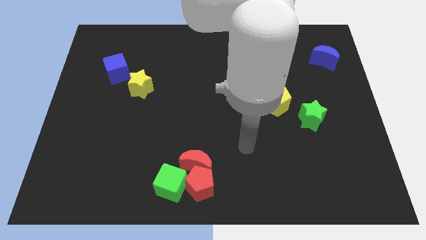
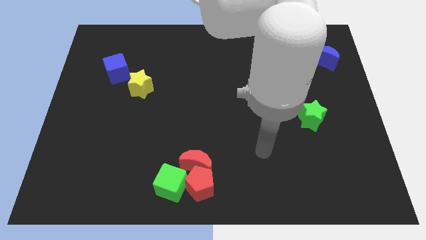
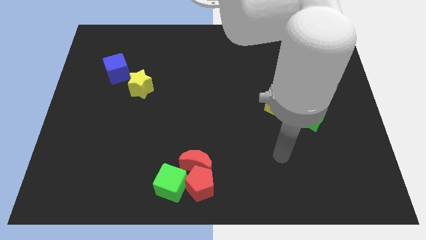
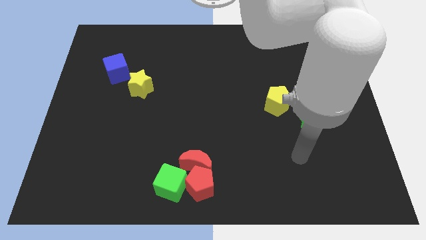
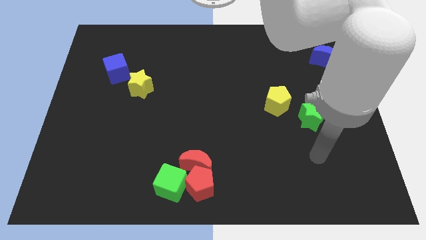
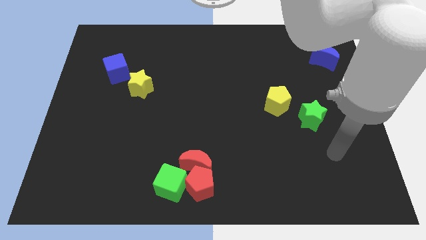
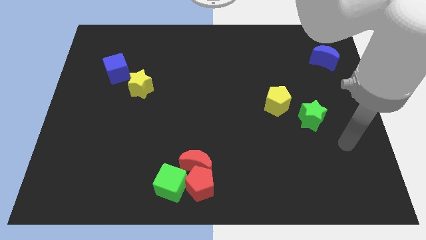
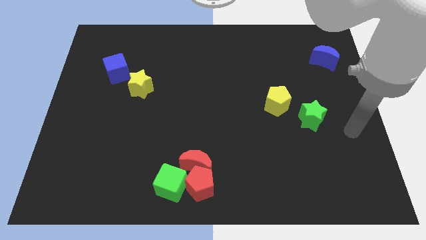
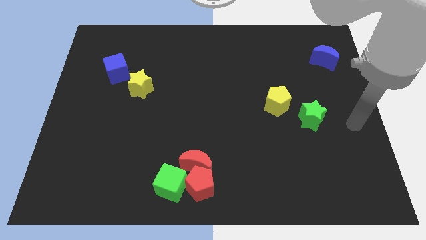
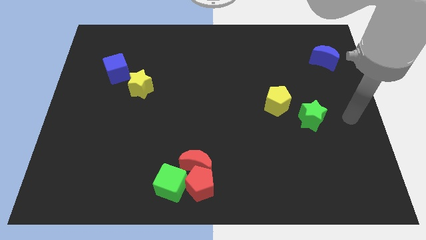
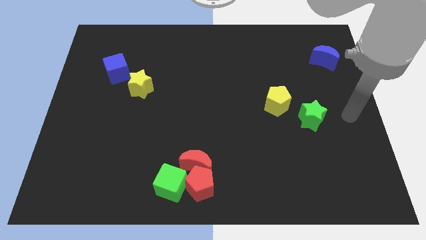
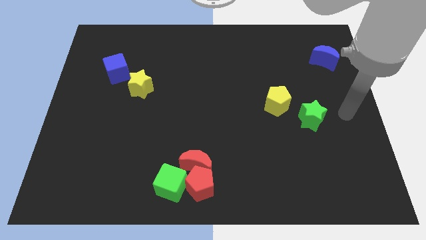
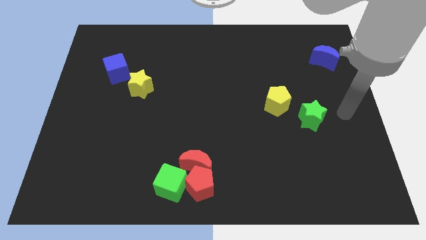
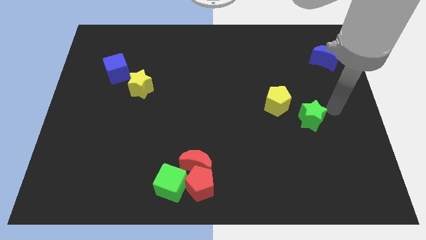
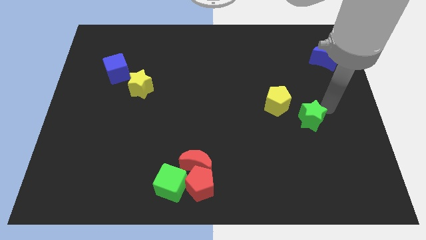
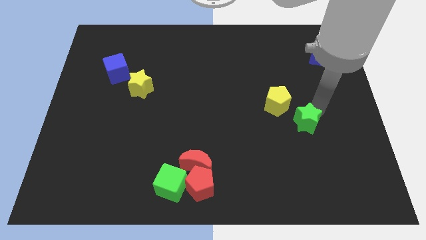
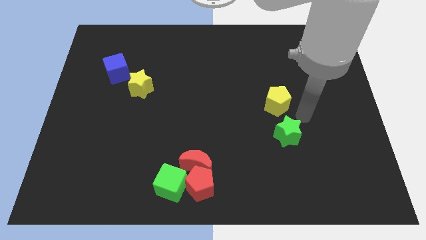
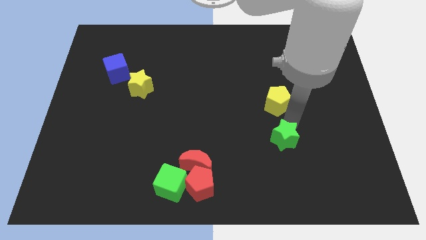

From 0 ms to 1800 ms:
place the green star below the yellow pentagon

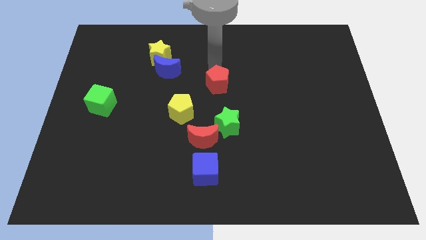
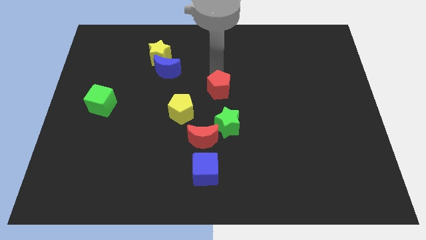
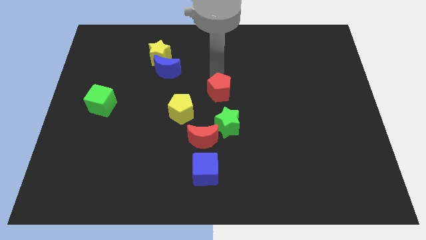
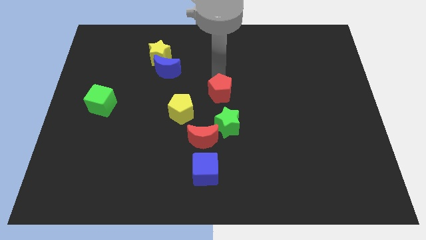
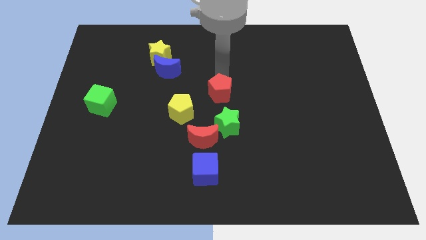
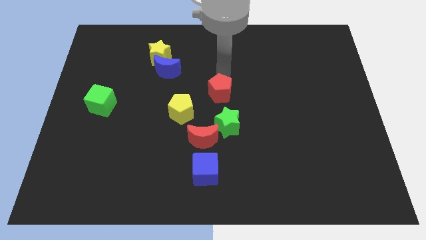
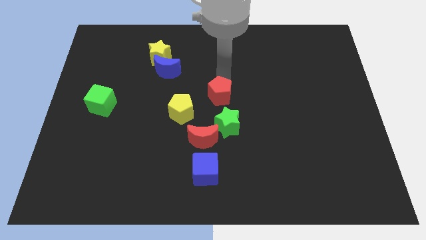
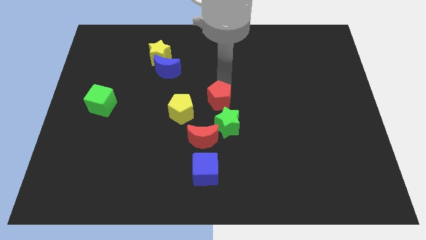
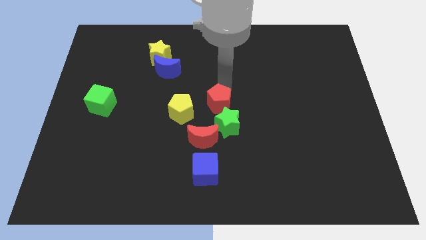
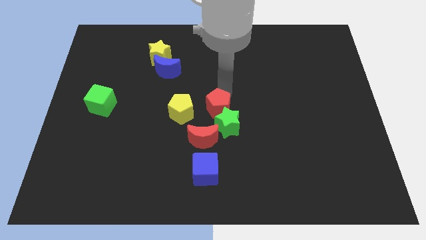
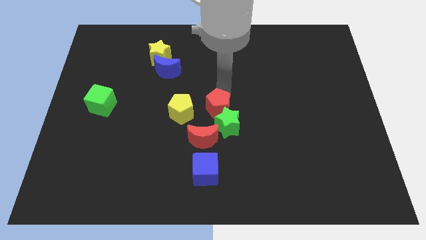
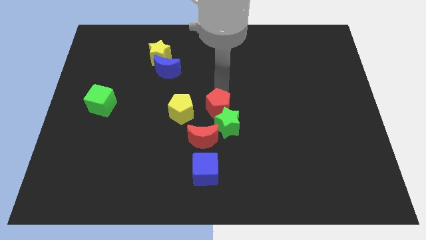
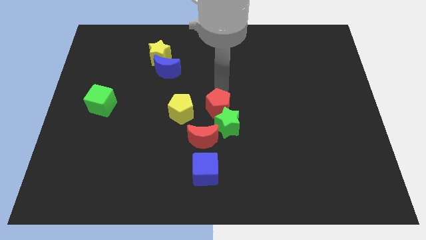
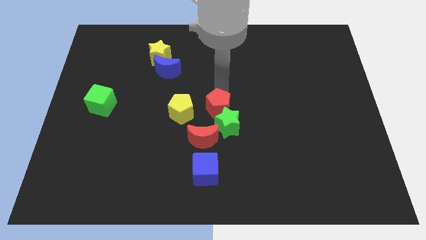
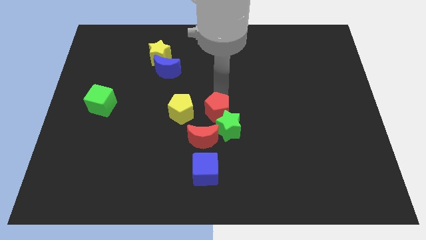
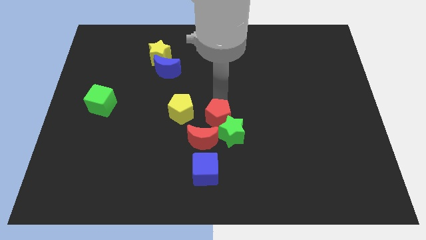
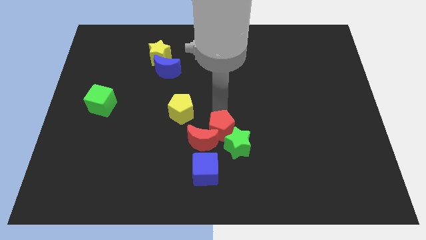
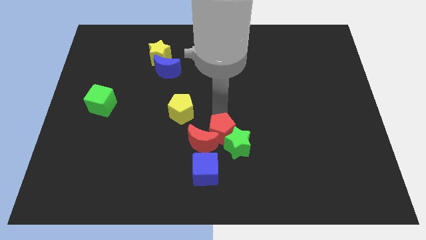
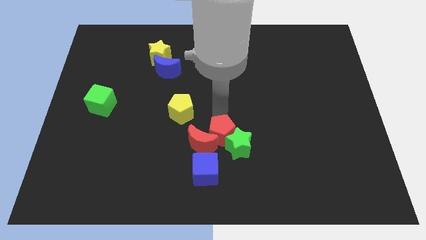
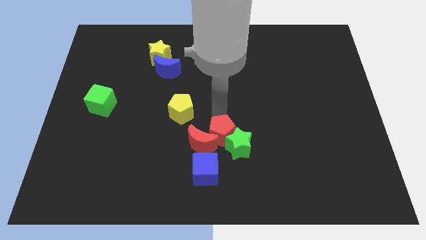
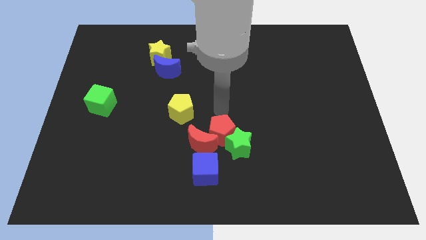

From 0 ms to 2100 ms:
push the red pentagon into the red moon

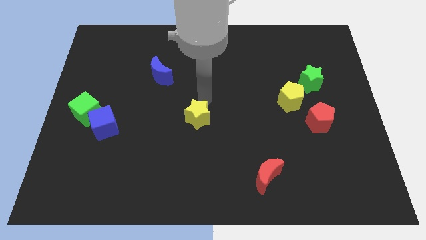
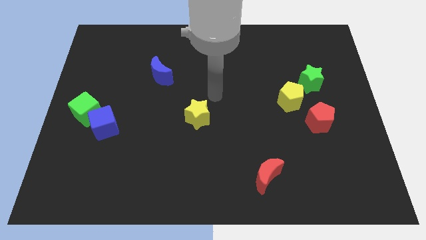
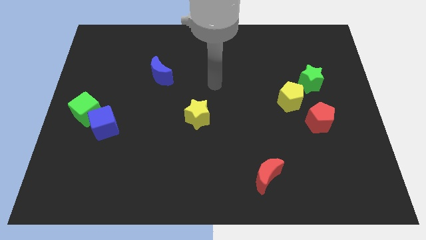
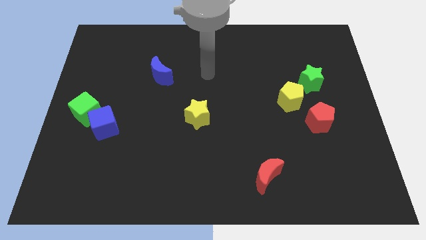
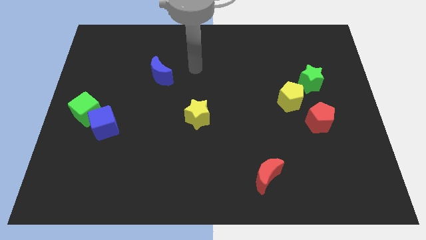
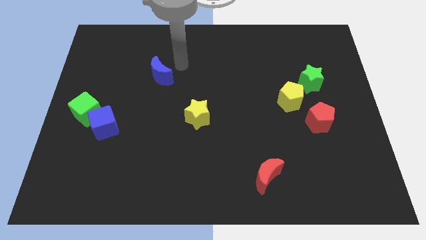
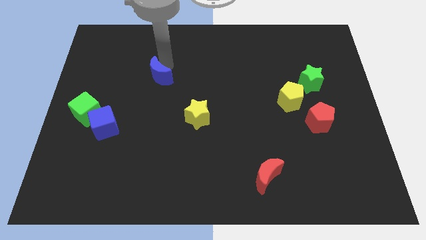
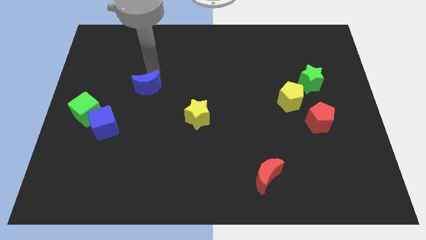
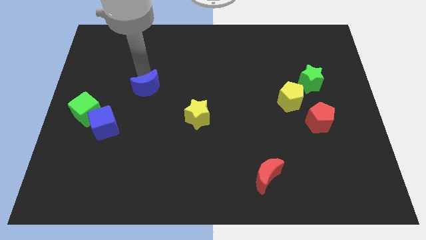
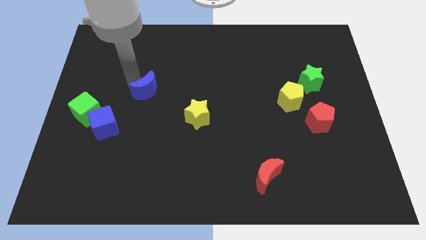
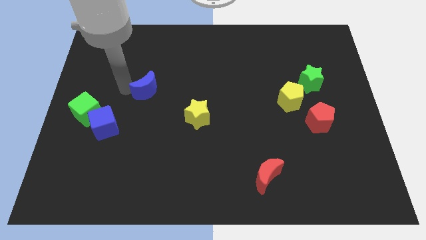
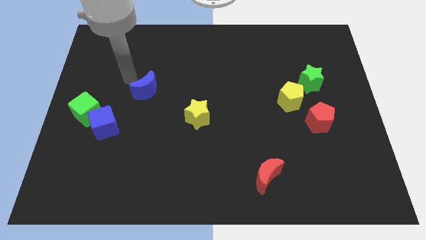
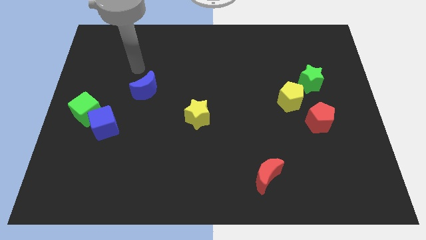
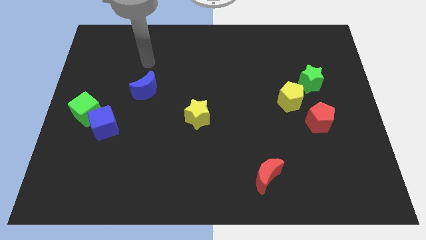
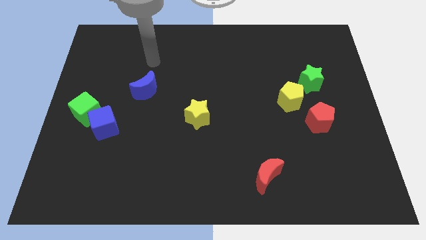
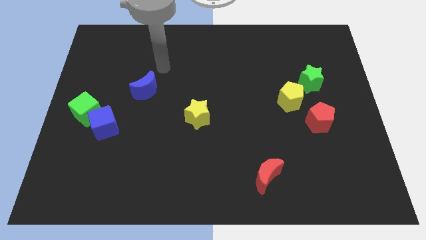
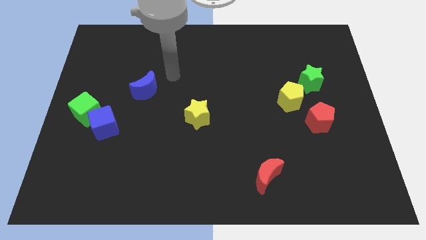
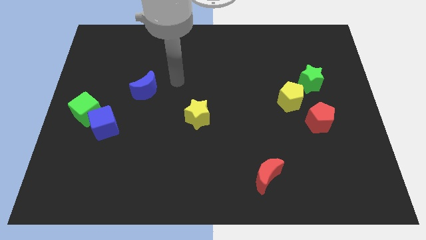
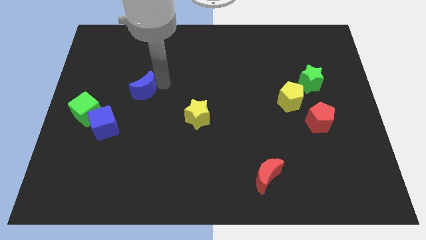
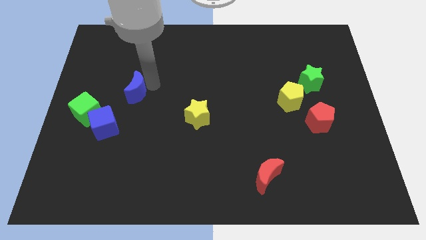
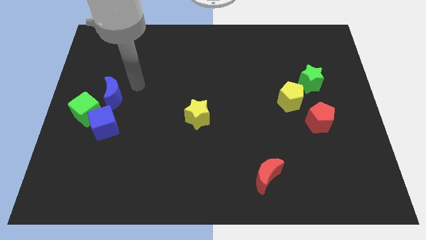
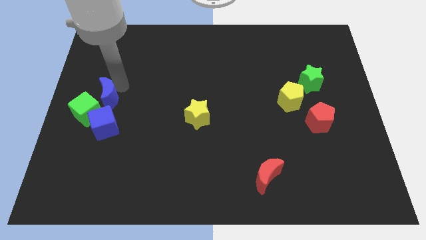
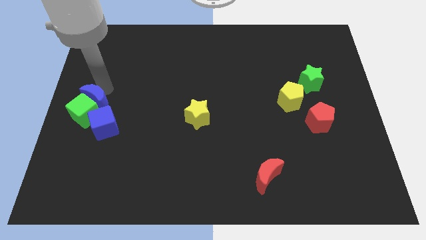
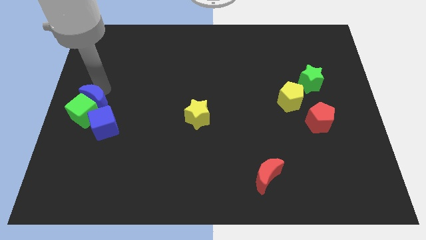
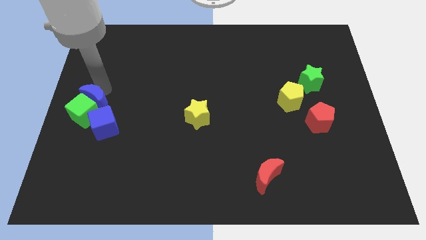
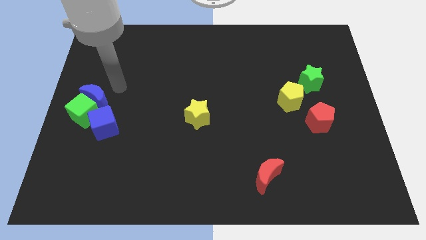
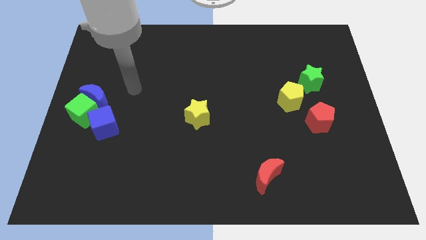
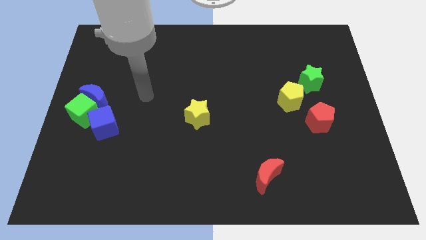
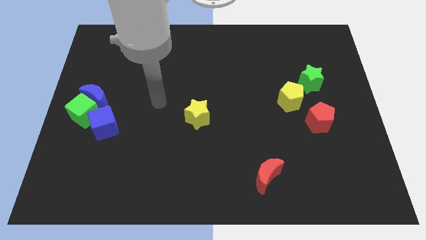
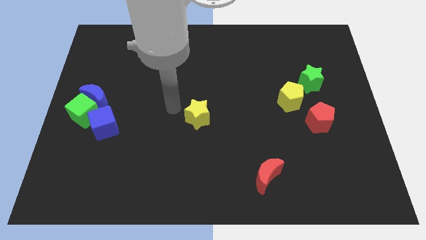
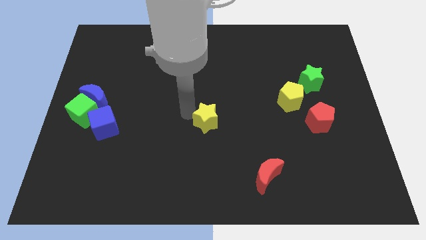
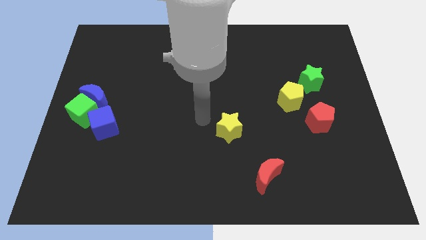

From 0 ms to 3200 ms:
push the blue moon into a green cube

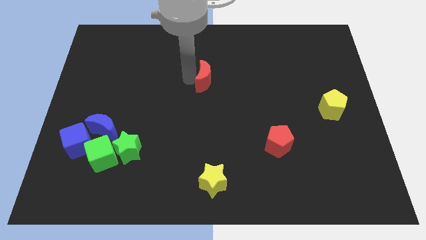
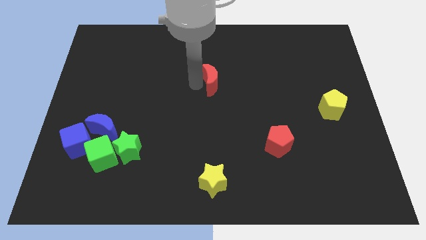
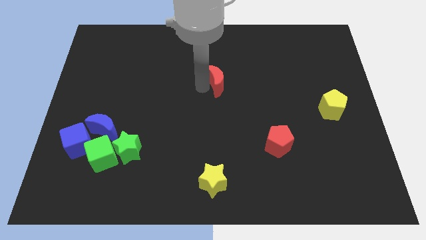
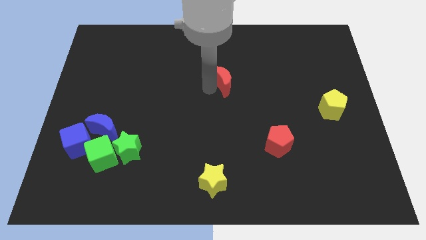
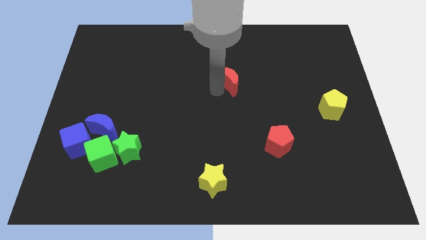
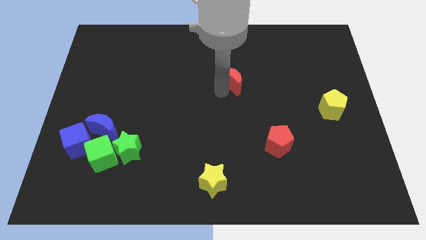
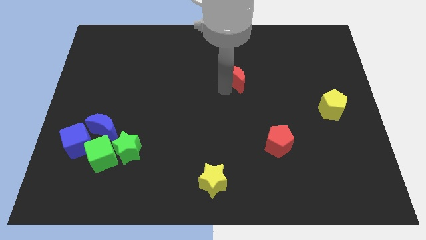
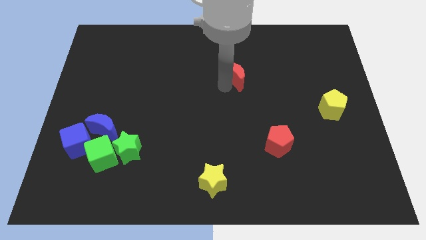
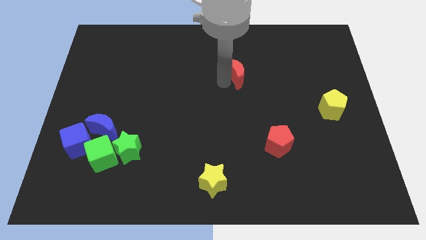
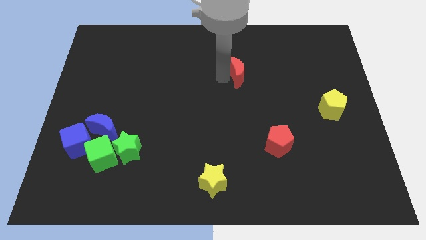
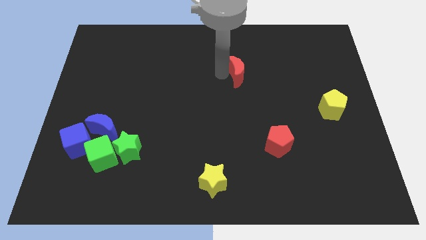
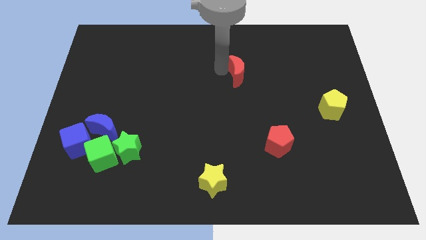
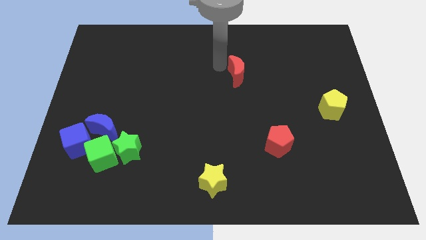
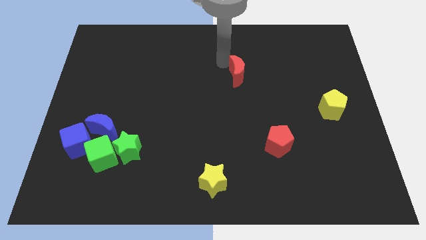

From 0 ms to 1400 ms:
move the red crescent towards the top center of the board

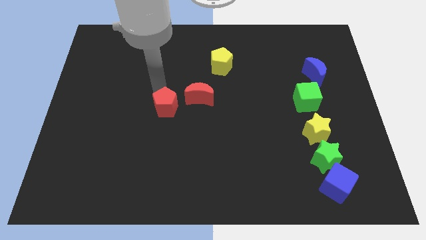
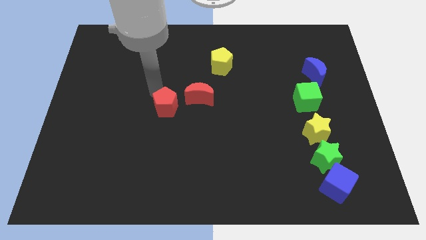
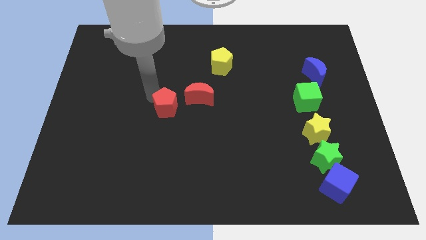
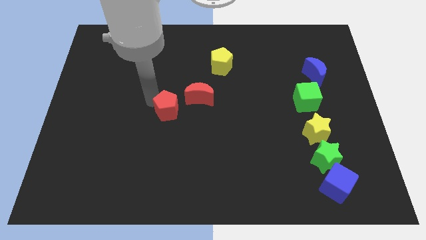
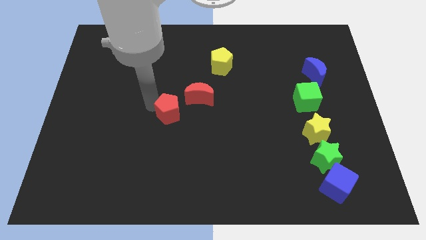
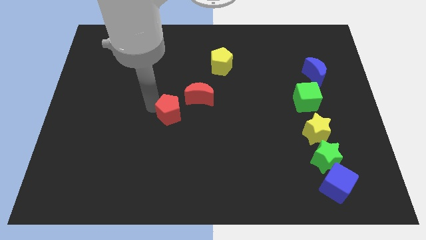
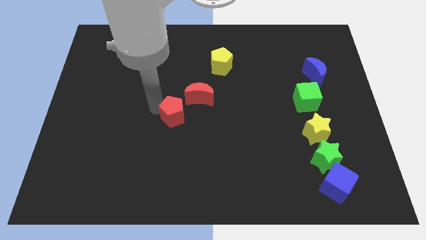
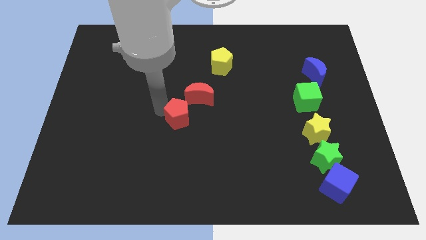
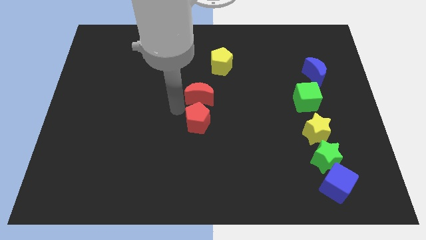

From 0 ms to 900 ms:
place red pentagon to the bottom side of the red moon
